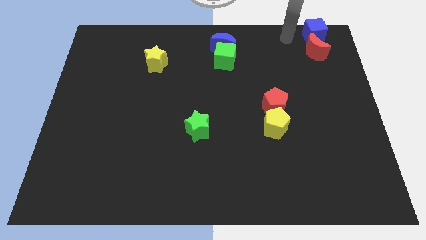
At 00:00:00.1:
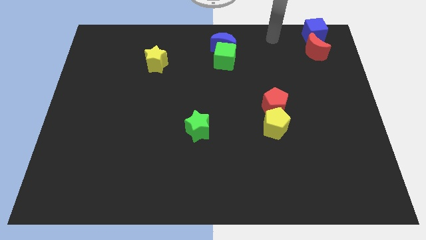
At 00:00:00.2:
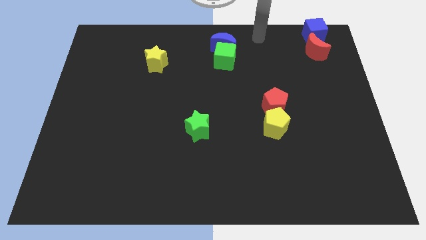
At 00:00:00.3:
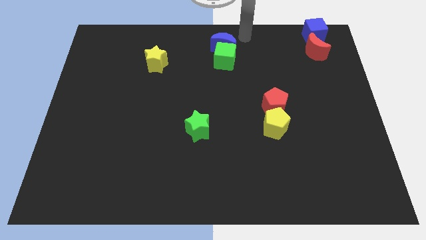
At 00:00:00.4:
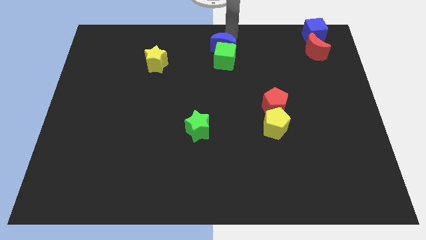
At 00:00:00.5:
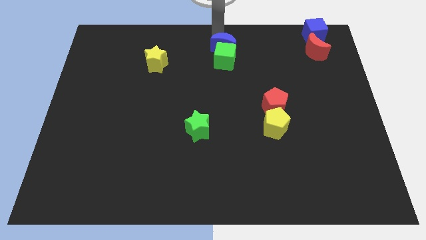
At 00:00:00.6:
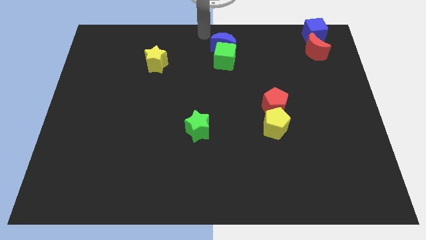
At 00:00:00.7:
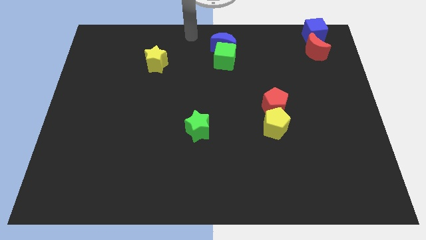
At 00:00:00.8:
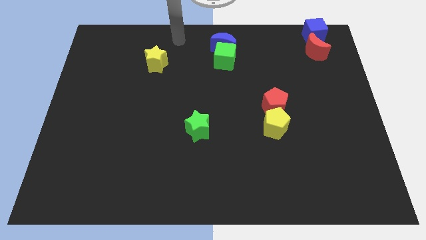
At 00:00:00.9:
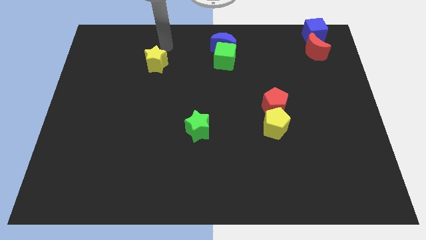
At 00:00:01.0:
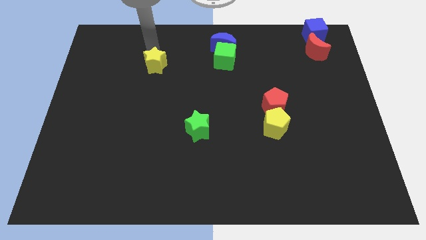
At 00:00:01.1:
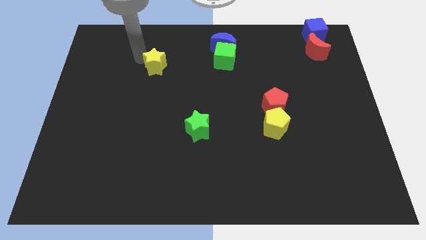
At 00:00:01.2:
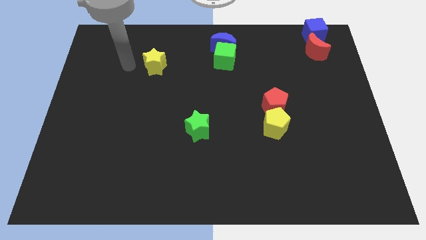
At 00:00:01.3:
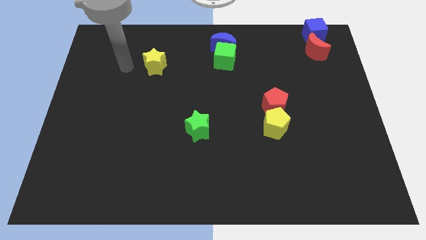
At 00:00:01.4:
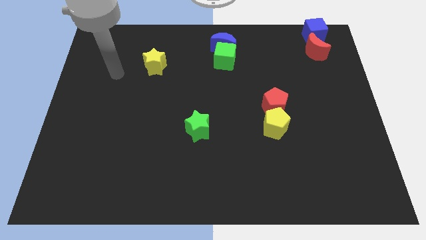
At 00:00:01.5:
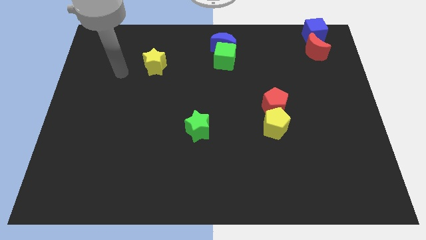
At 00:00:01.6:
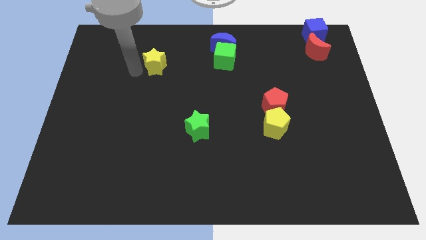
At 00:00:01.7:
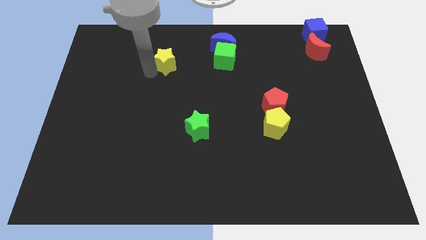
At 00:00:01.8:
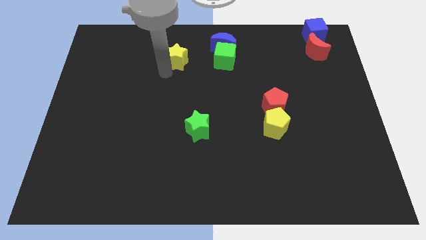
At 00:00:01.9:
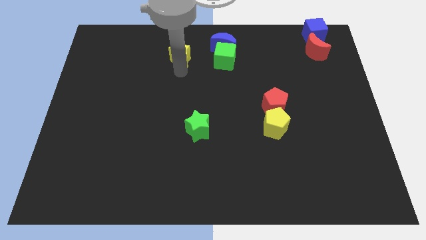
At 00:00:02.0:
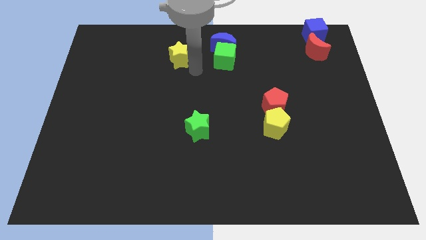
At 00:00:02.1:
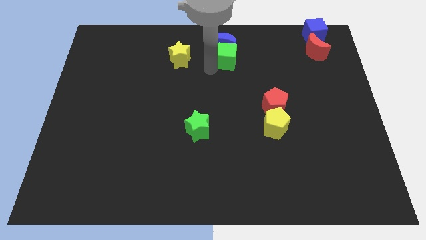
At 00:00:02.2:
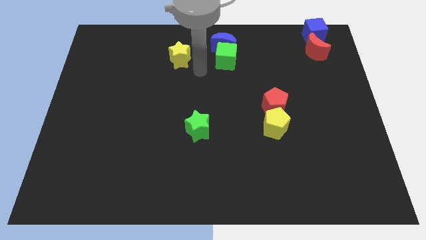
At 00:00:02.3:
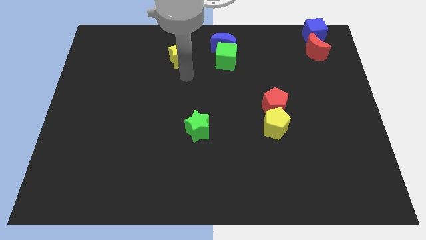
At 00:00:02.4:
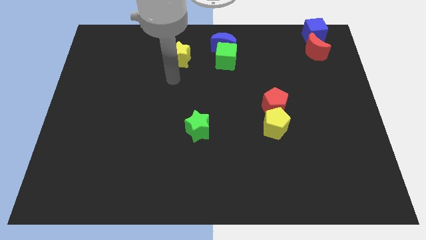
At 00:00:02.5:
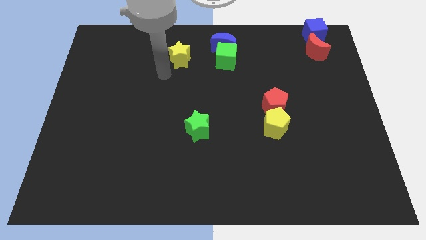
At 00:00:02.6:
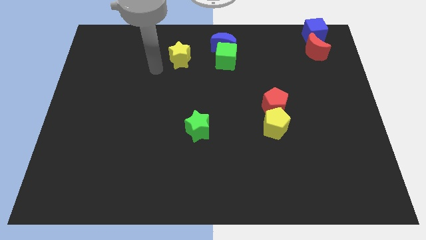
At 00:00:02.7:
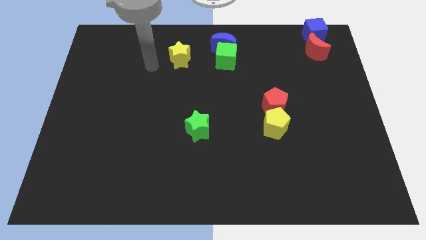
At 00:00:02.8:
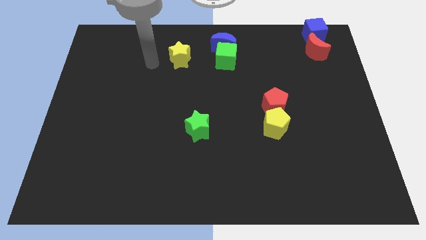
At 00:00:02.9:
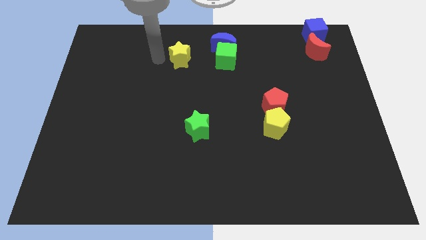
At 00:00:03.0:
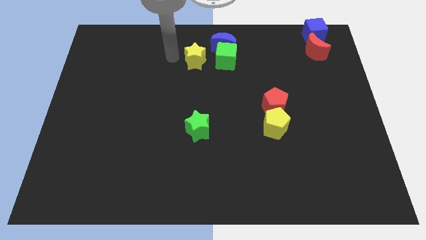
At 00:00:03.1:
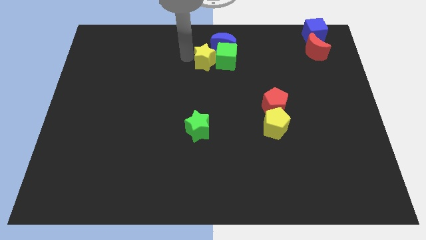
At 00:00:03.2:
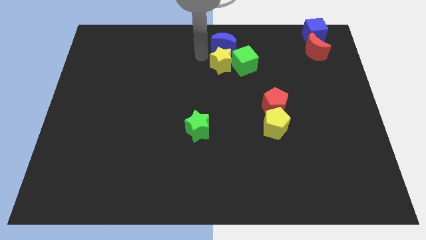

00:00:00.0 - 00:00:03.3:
slide the yellow star into the green cube

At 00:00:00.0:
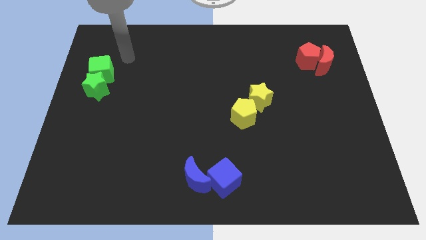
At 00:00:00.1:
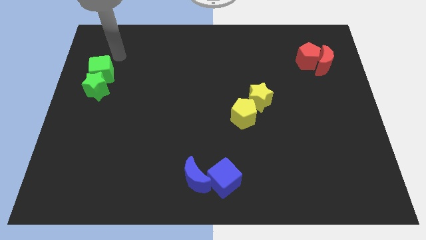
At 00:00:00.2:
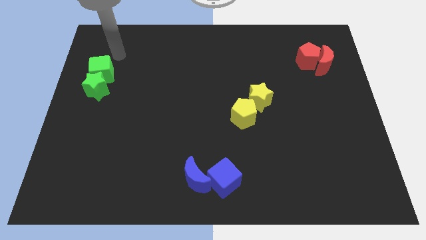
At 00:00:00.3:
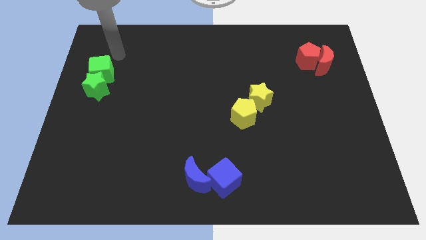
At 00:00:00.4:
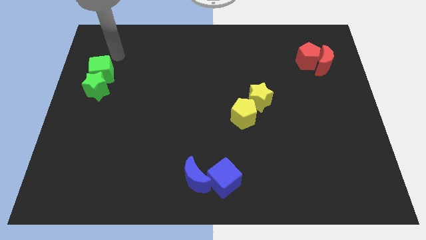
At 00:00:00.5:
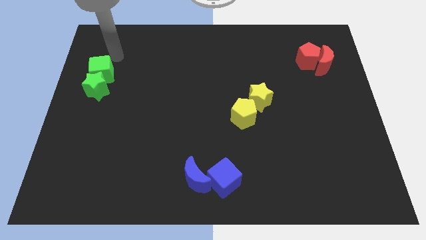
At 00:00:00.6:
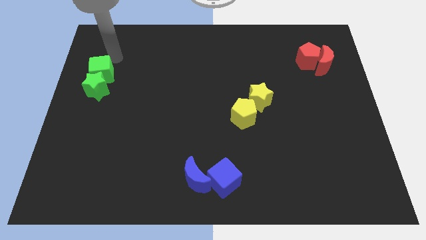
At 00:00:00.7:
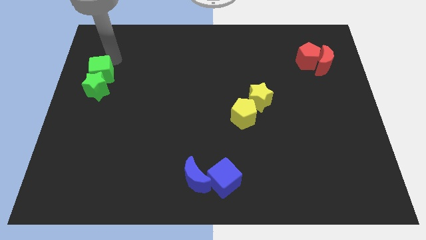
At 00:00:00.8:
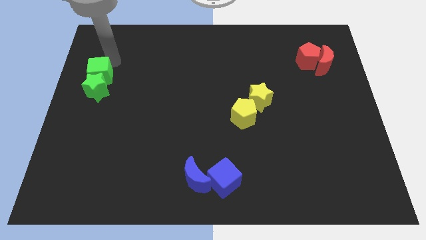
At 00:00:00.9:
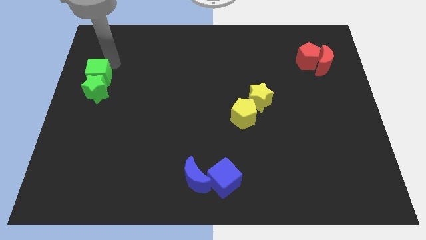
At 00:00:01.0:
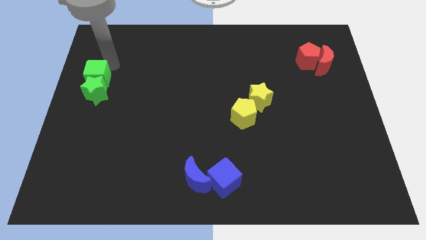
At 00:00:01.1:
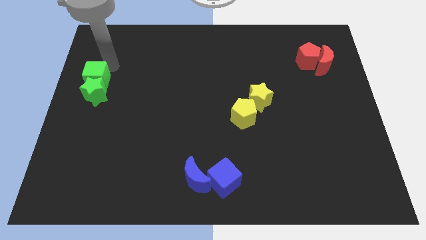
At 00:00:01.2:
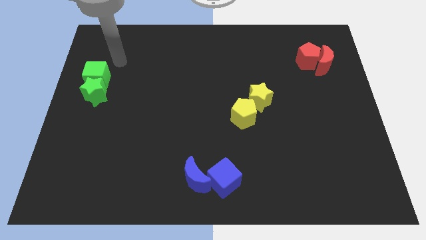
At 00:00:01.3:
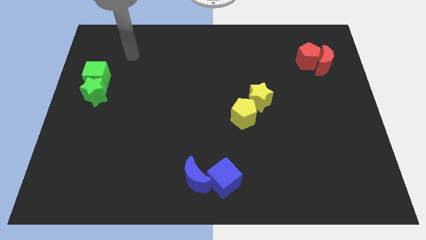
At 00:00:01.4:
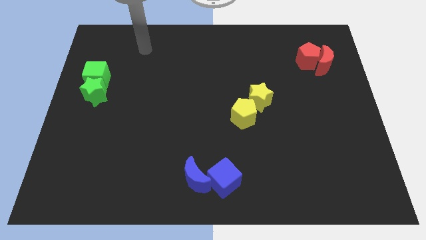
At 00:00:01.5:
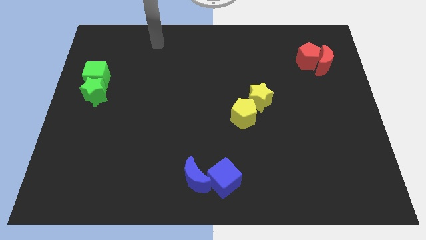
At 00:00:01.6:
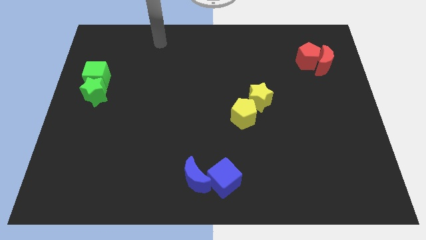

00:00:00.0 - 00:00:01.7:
slightly push the green blocks towards left center of the board

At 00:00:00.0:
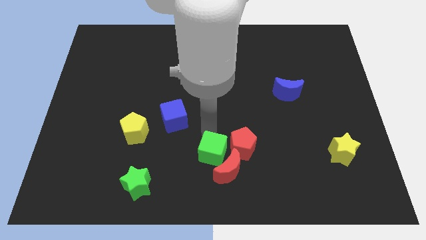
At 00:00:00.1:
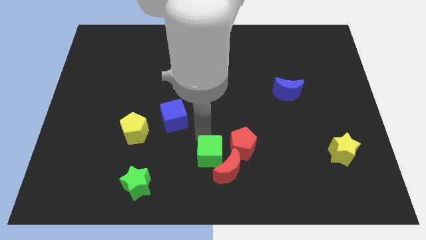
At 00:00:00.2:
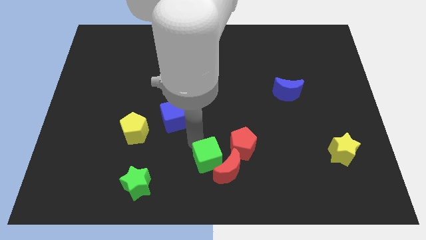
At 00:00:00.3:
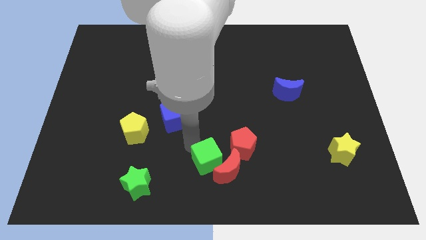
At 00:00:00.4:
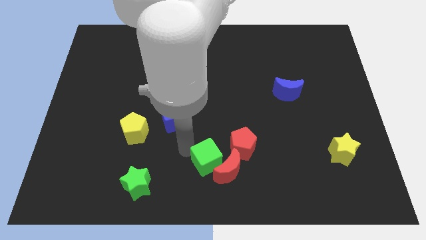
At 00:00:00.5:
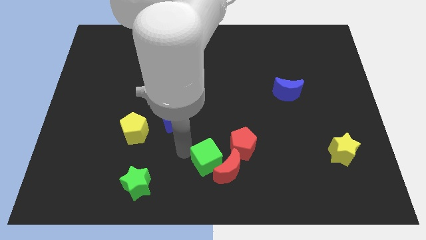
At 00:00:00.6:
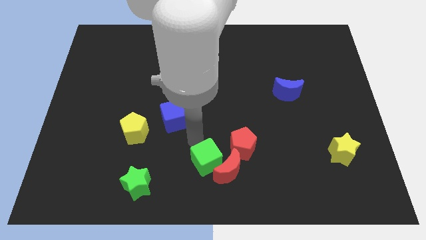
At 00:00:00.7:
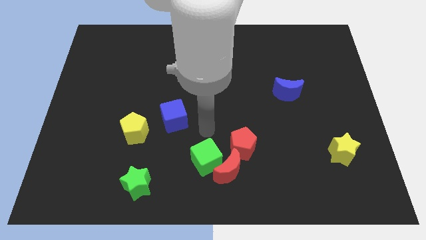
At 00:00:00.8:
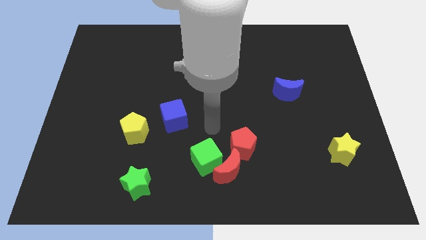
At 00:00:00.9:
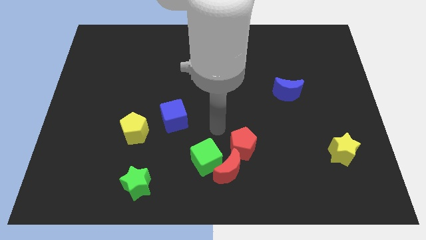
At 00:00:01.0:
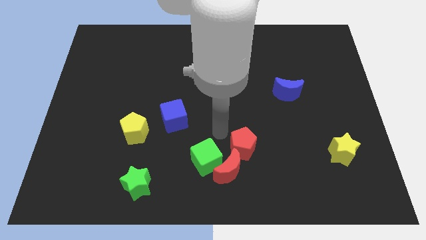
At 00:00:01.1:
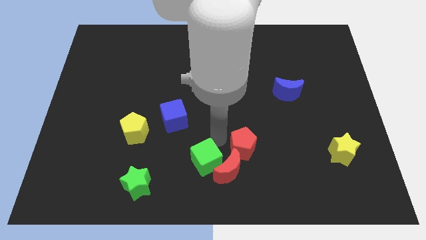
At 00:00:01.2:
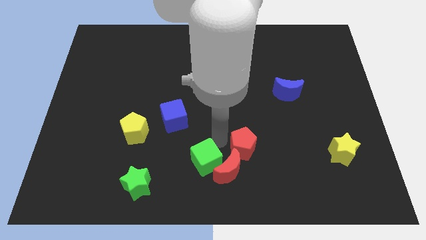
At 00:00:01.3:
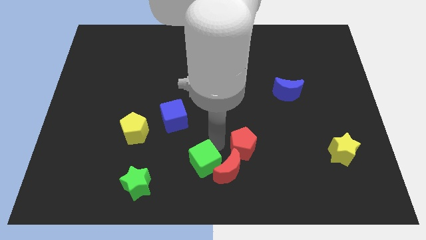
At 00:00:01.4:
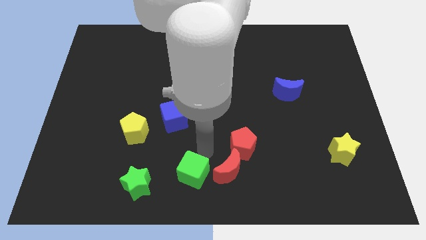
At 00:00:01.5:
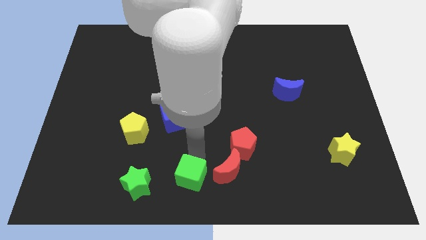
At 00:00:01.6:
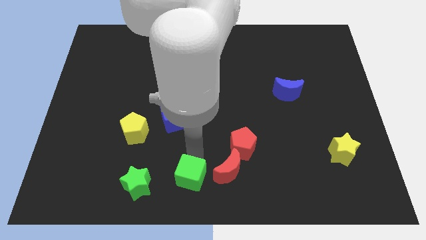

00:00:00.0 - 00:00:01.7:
push the green cube to the left of the red crescent

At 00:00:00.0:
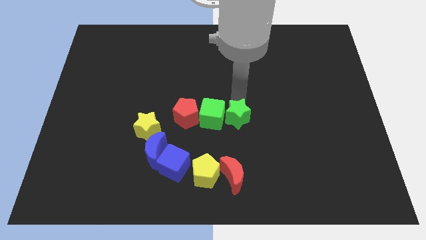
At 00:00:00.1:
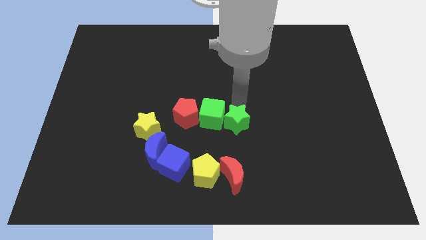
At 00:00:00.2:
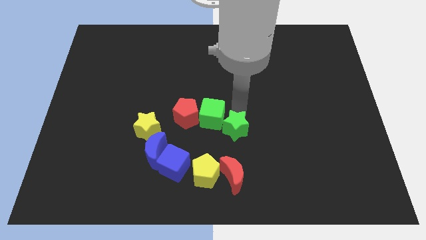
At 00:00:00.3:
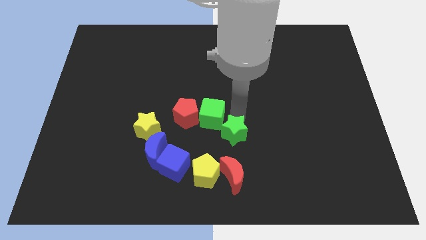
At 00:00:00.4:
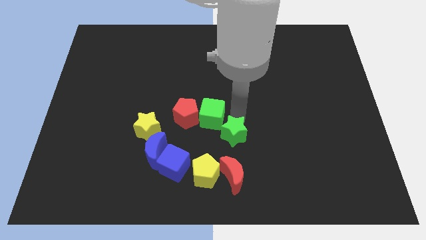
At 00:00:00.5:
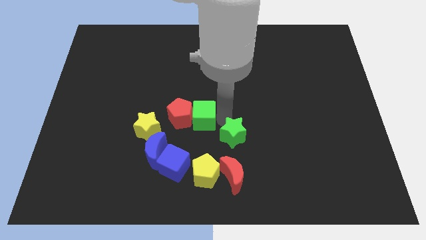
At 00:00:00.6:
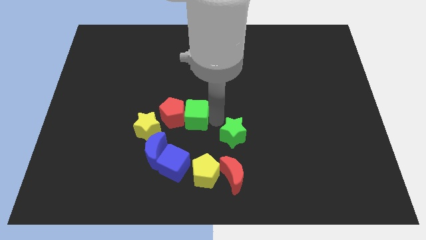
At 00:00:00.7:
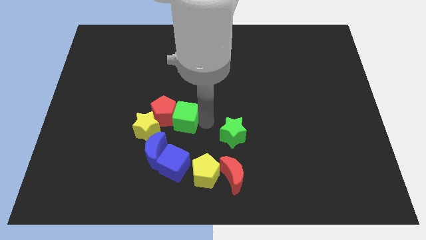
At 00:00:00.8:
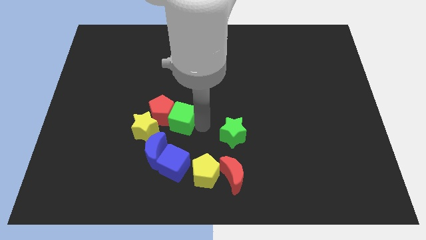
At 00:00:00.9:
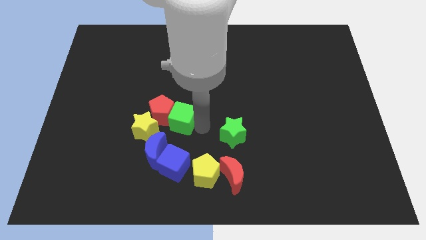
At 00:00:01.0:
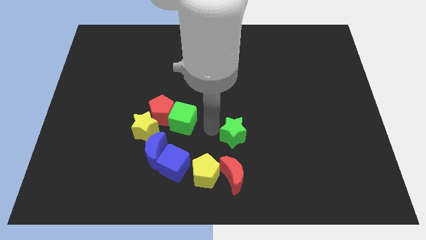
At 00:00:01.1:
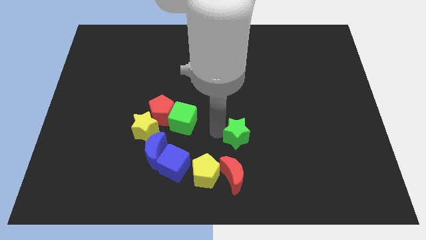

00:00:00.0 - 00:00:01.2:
separate the green star from the green cube

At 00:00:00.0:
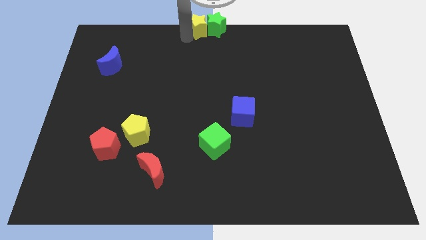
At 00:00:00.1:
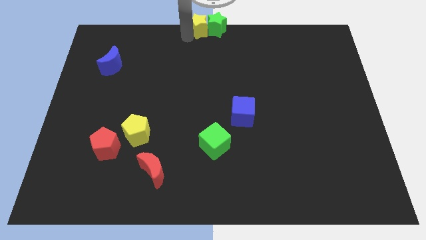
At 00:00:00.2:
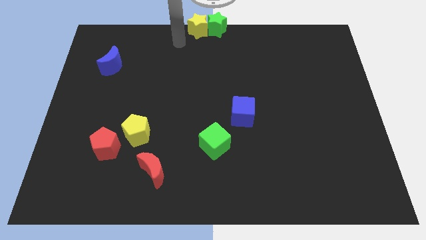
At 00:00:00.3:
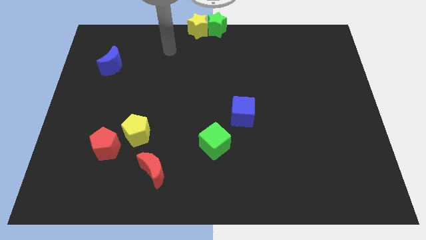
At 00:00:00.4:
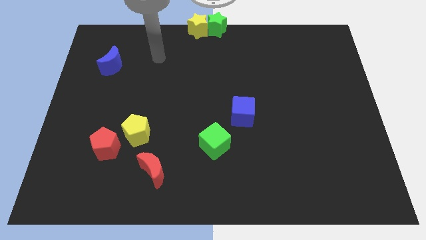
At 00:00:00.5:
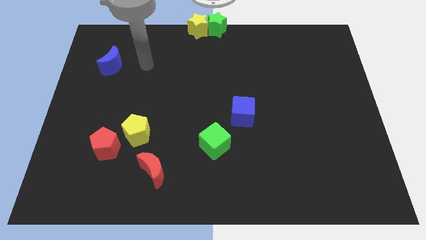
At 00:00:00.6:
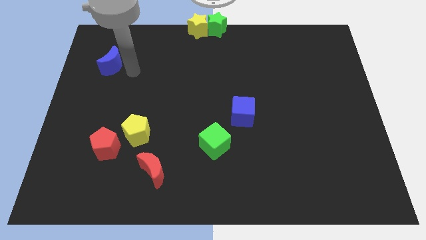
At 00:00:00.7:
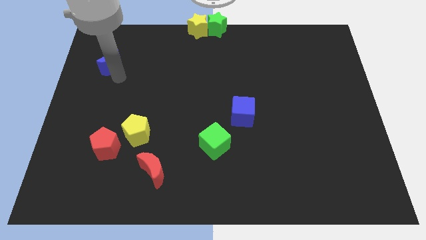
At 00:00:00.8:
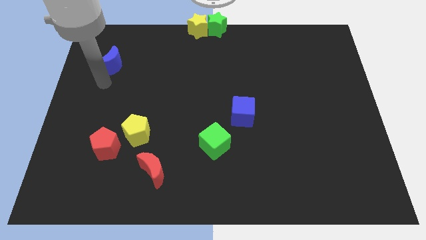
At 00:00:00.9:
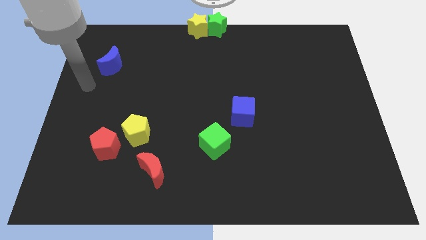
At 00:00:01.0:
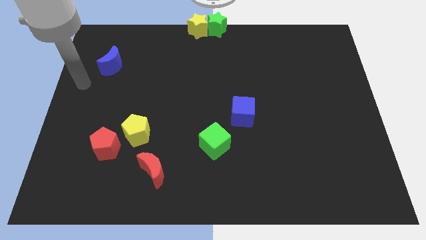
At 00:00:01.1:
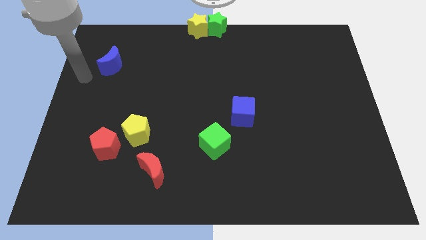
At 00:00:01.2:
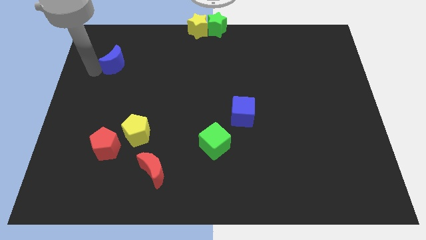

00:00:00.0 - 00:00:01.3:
move your arm around the blue moon
